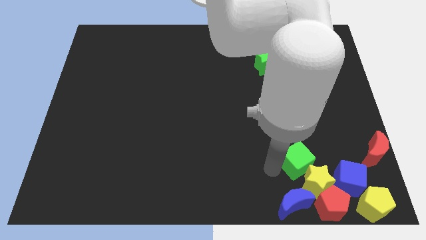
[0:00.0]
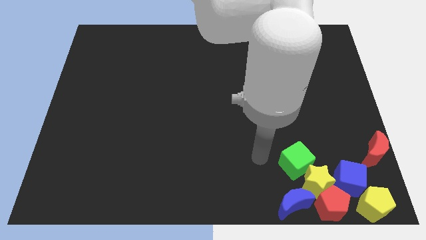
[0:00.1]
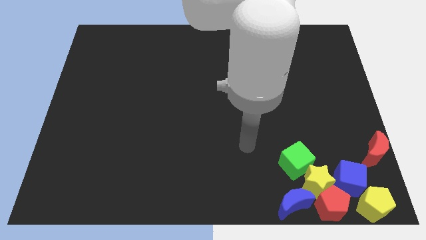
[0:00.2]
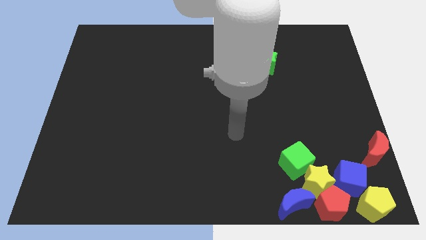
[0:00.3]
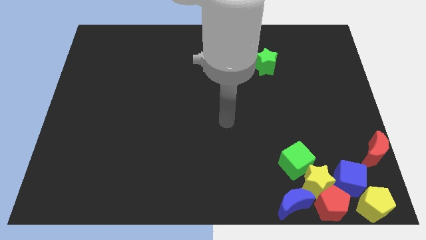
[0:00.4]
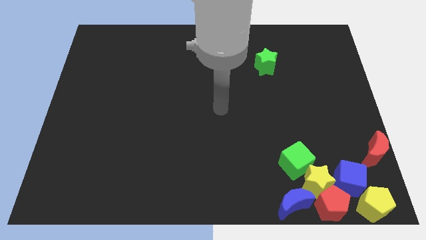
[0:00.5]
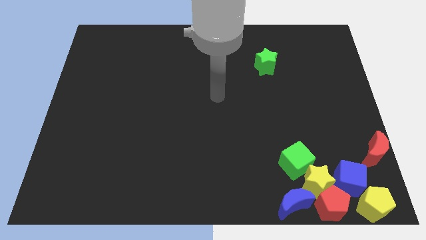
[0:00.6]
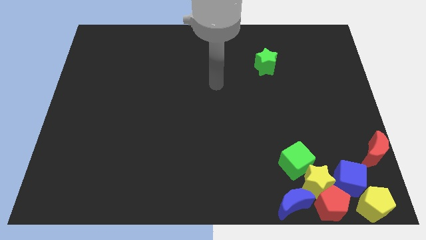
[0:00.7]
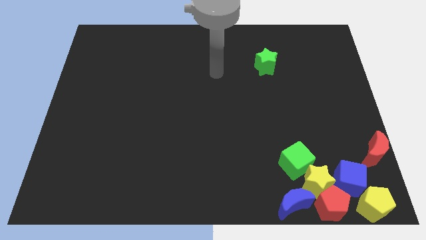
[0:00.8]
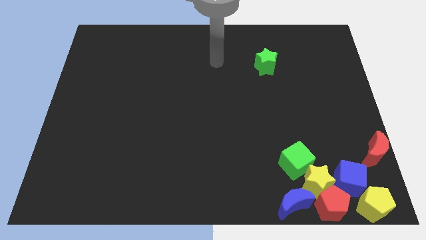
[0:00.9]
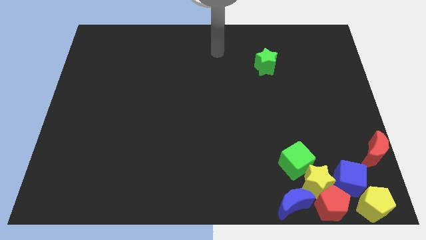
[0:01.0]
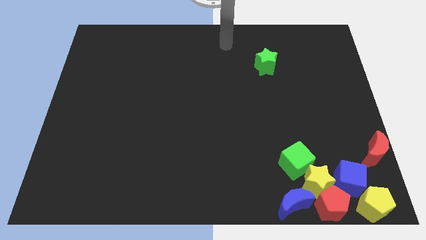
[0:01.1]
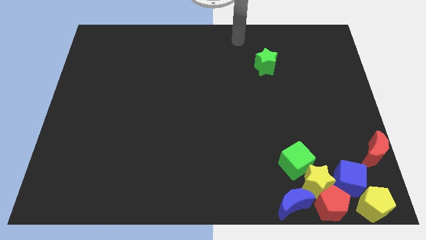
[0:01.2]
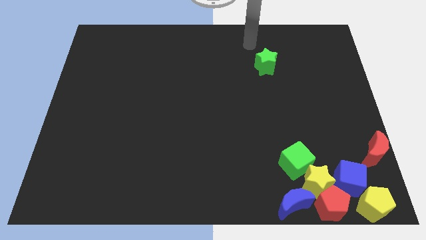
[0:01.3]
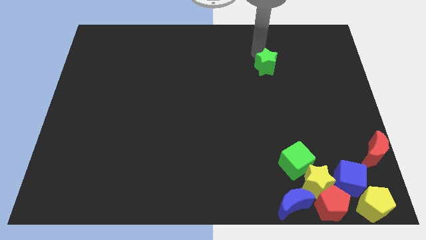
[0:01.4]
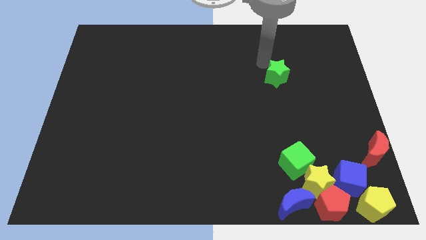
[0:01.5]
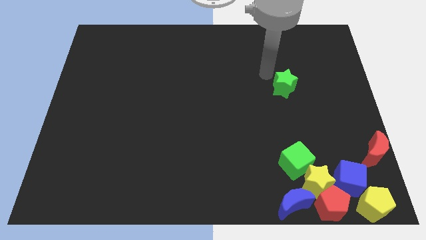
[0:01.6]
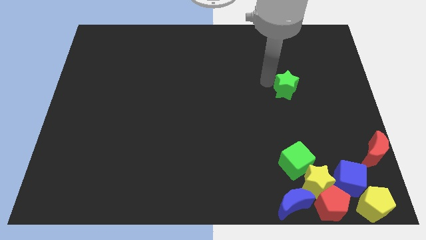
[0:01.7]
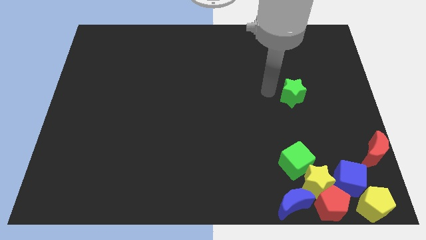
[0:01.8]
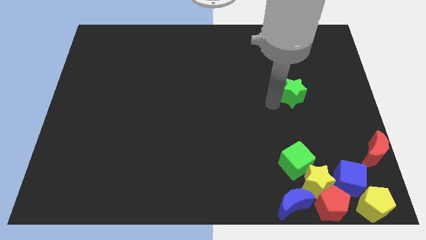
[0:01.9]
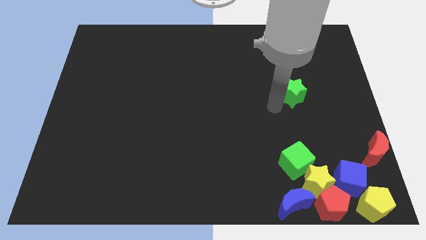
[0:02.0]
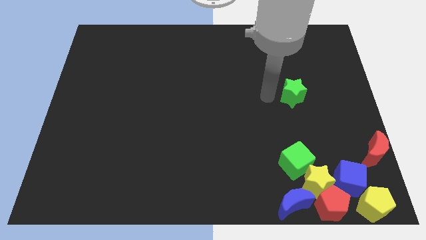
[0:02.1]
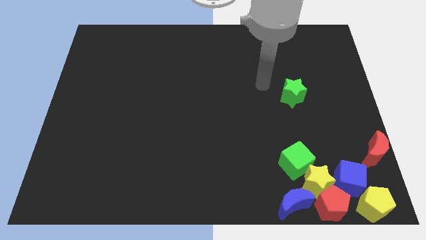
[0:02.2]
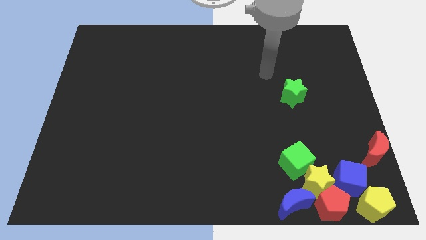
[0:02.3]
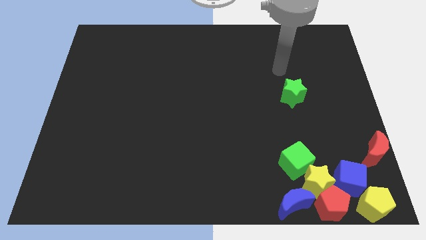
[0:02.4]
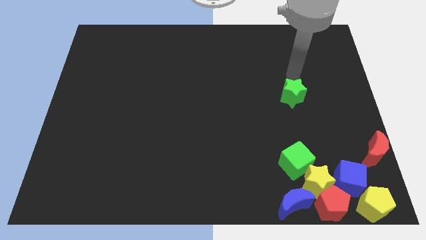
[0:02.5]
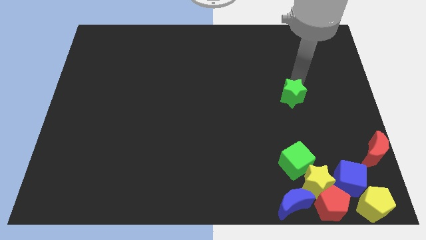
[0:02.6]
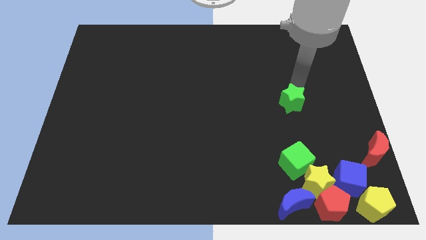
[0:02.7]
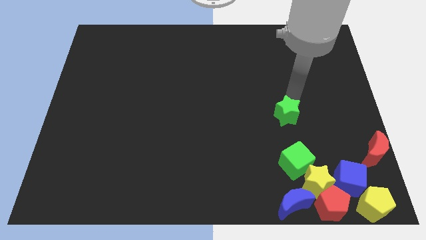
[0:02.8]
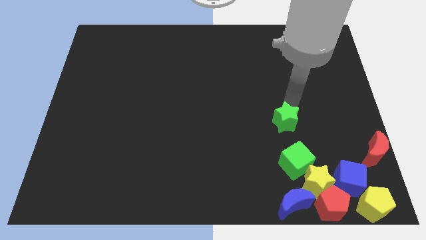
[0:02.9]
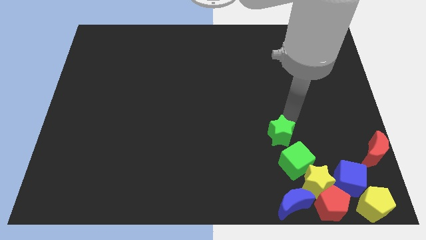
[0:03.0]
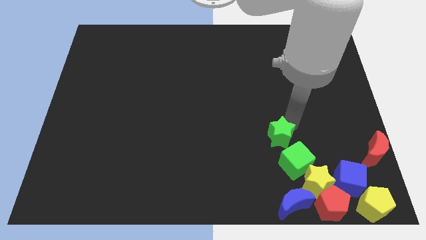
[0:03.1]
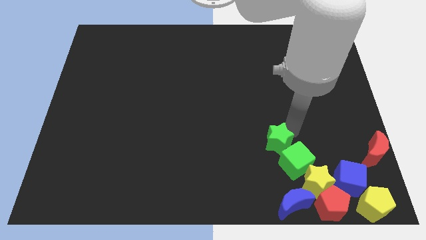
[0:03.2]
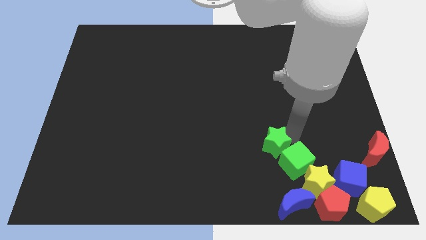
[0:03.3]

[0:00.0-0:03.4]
move the green star close to the green cube

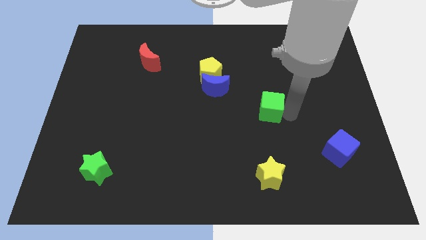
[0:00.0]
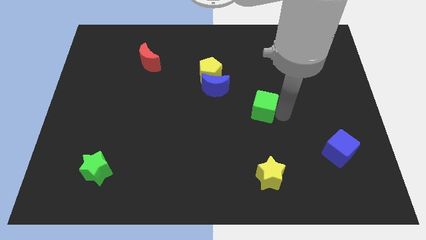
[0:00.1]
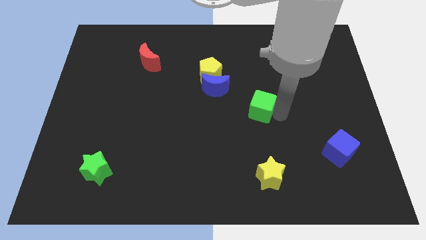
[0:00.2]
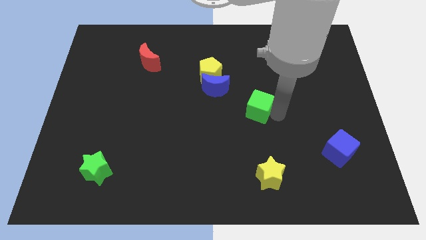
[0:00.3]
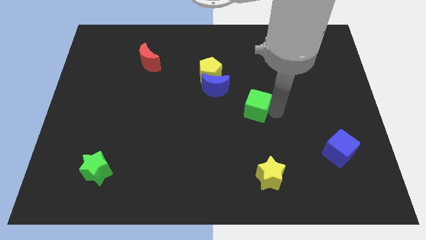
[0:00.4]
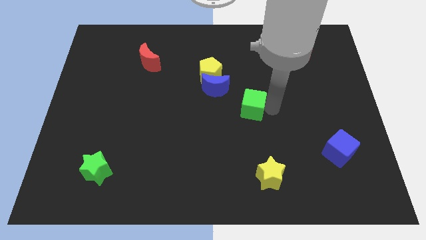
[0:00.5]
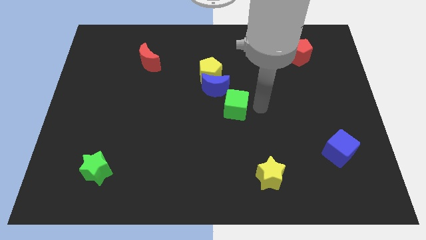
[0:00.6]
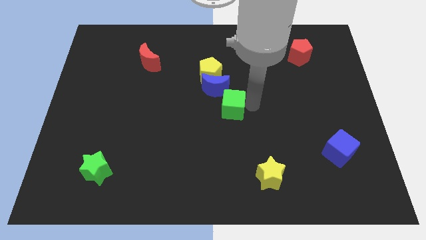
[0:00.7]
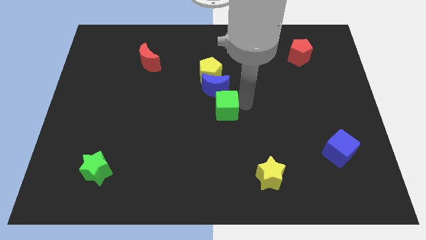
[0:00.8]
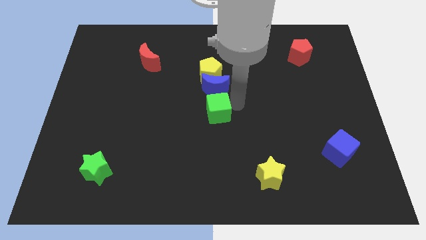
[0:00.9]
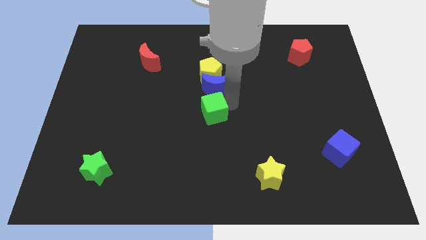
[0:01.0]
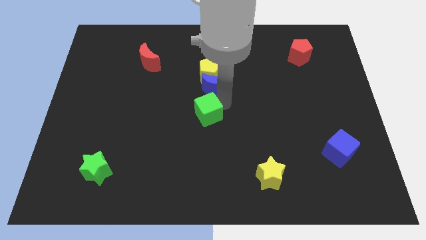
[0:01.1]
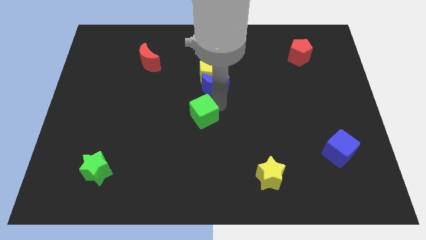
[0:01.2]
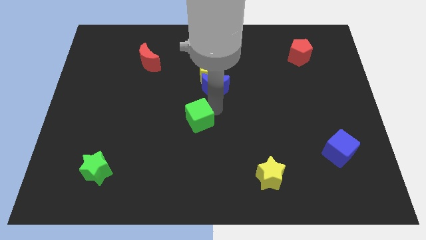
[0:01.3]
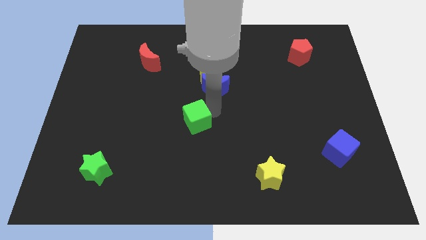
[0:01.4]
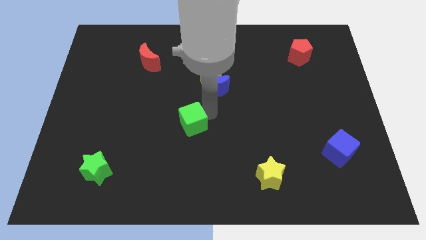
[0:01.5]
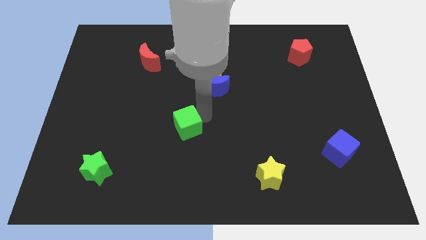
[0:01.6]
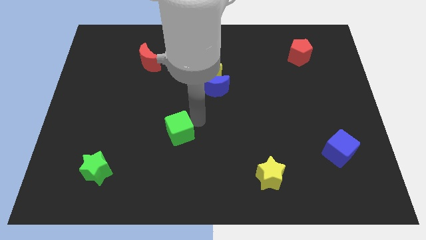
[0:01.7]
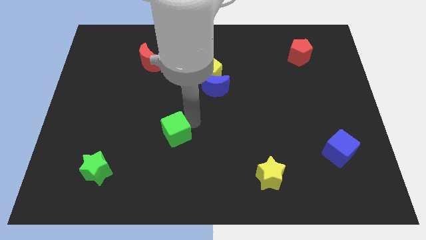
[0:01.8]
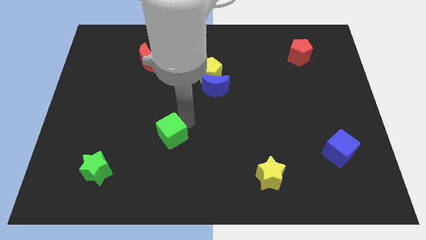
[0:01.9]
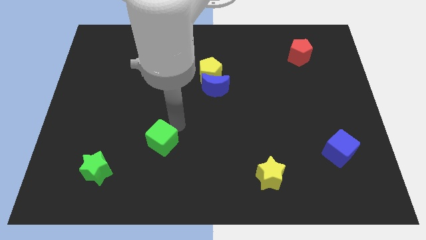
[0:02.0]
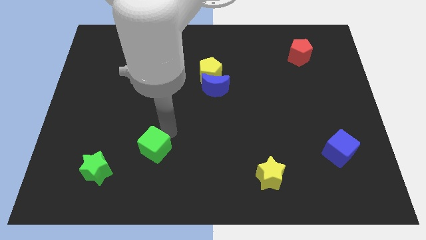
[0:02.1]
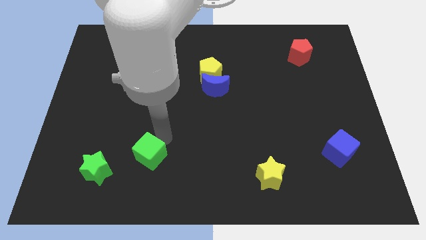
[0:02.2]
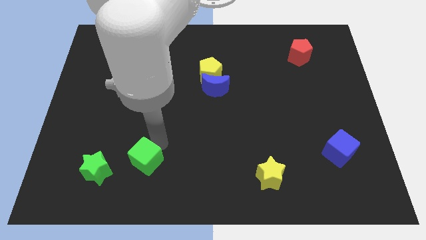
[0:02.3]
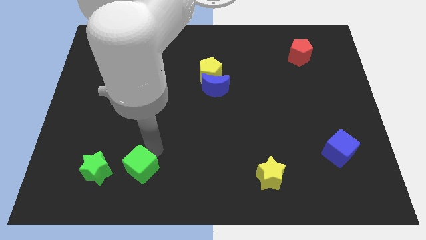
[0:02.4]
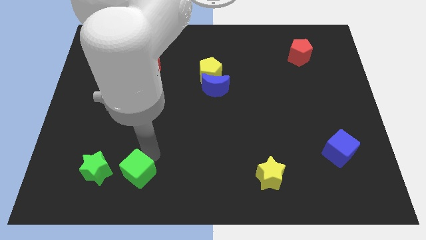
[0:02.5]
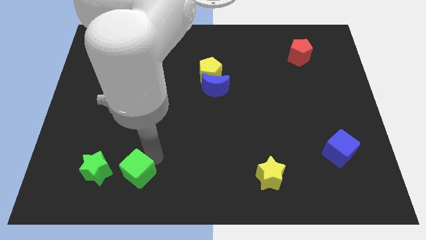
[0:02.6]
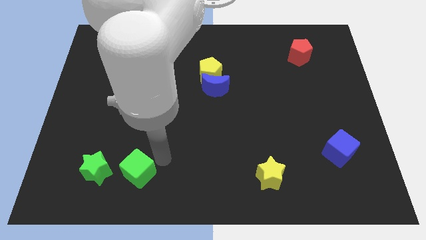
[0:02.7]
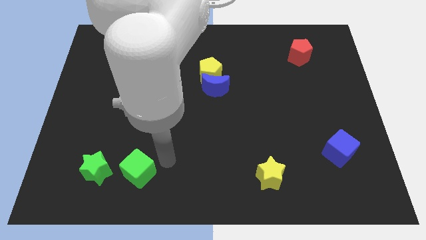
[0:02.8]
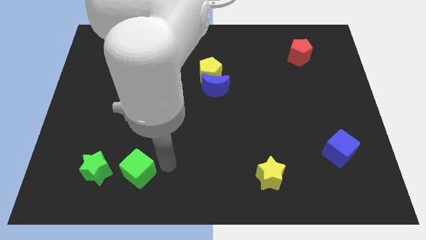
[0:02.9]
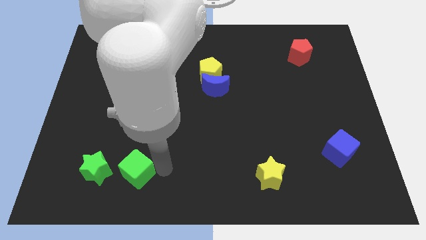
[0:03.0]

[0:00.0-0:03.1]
move the green cube to the right side of the green star

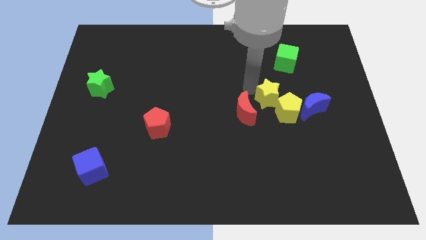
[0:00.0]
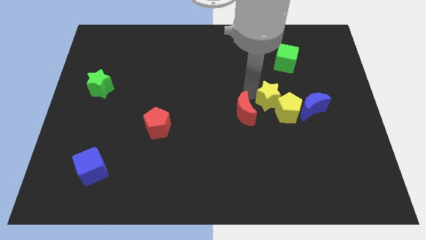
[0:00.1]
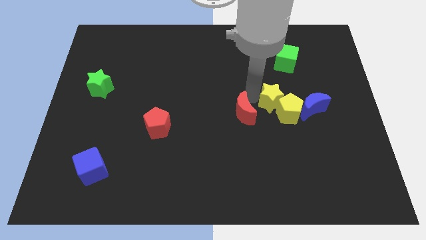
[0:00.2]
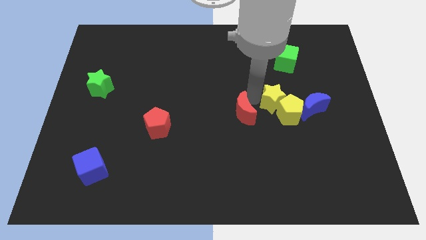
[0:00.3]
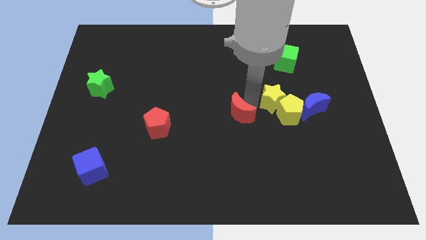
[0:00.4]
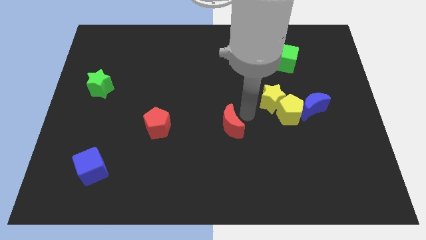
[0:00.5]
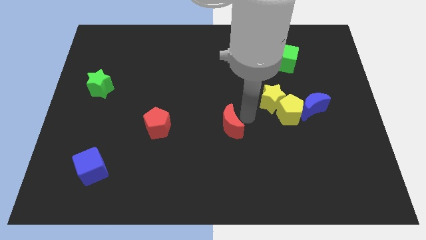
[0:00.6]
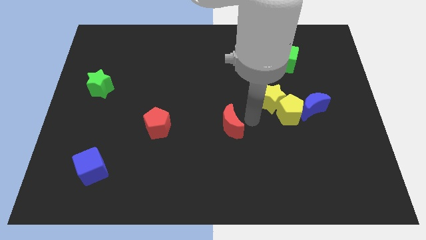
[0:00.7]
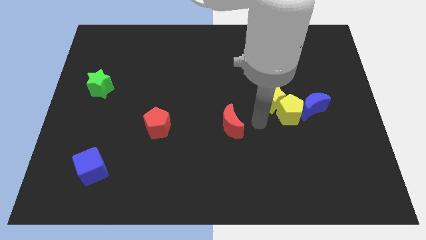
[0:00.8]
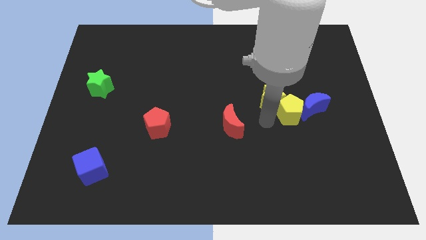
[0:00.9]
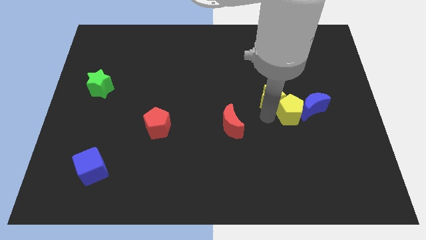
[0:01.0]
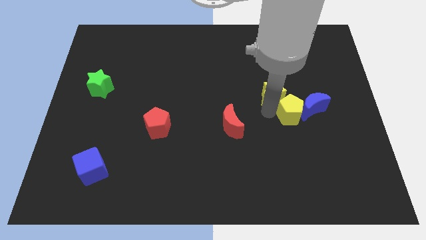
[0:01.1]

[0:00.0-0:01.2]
place the red moon paralel right to the red pentagon

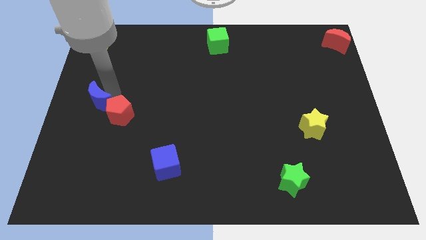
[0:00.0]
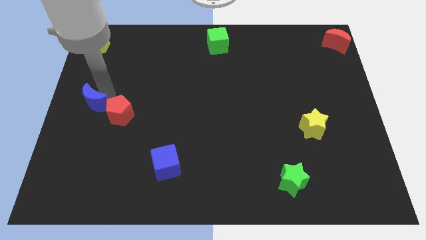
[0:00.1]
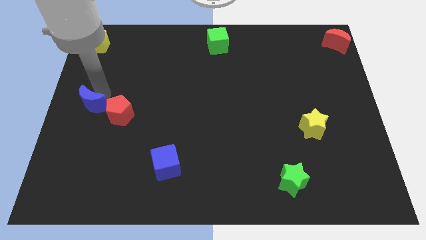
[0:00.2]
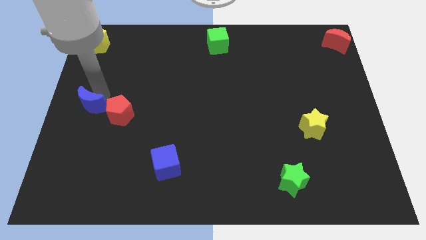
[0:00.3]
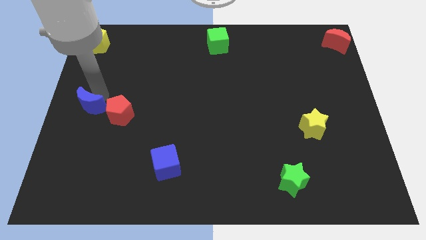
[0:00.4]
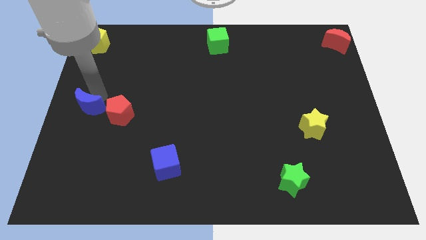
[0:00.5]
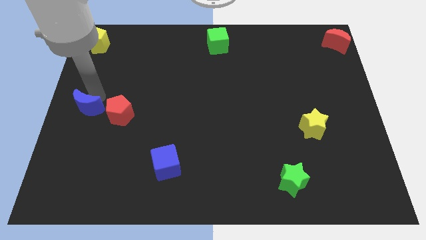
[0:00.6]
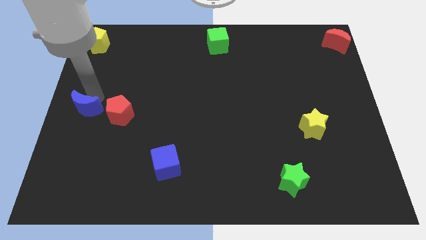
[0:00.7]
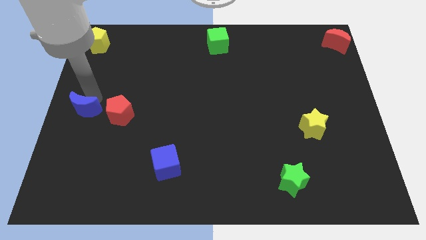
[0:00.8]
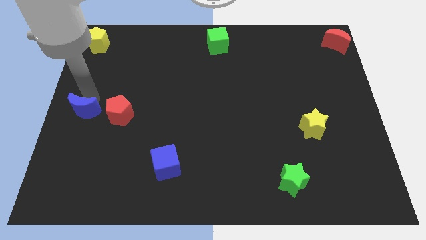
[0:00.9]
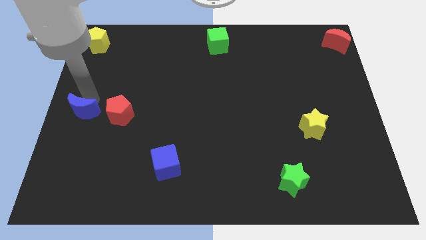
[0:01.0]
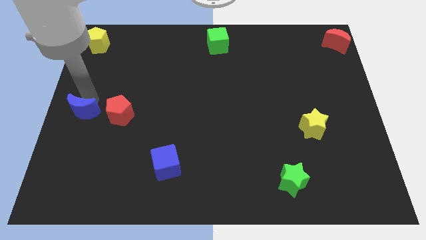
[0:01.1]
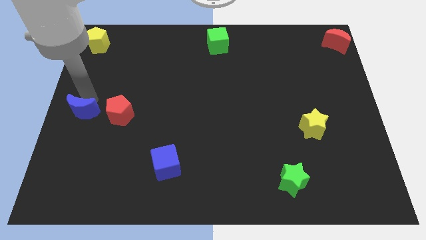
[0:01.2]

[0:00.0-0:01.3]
place the blue crescent to the left of the red pentagon

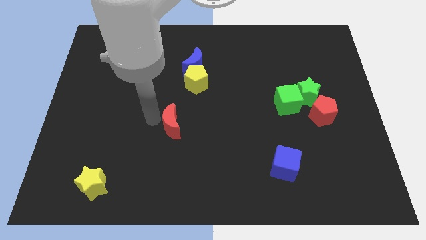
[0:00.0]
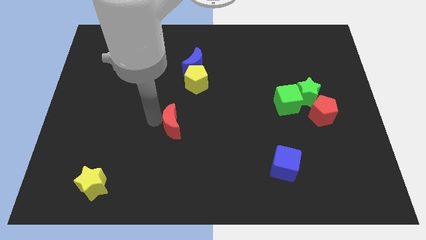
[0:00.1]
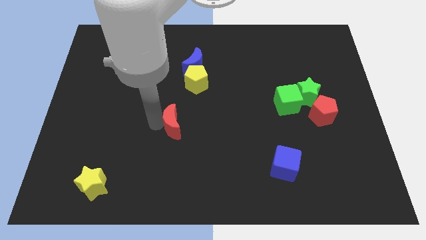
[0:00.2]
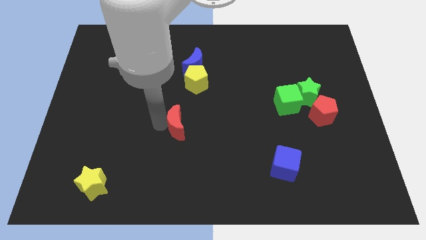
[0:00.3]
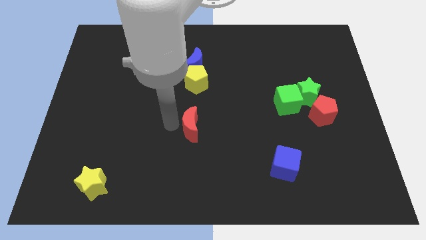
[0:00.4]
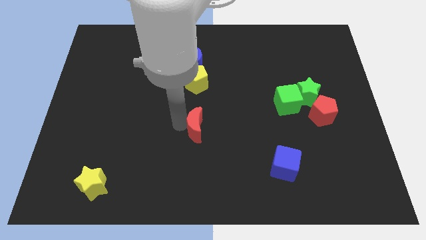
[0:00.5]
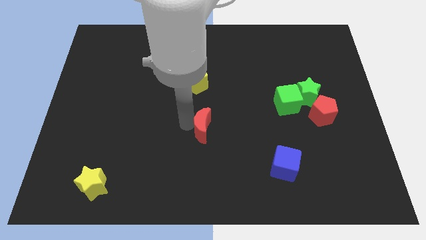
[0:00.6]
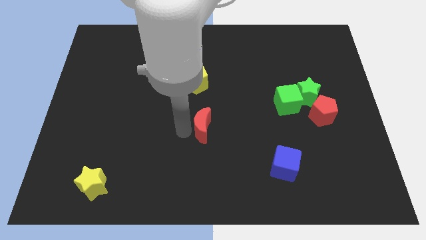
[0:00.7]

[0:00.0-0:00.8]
place the red moon below the yellow pentagon
